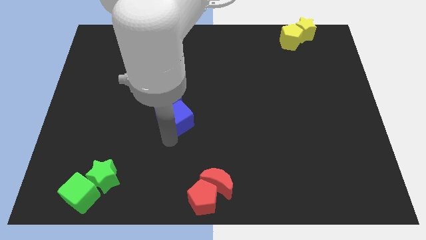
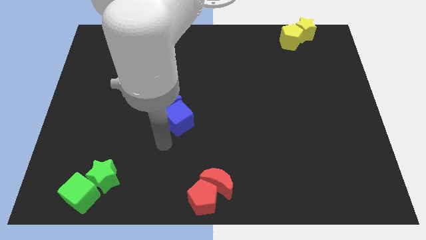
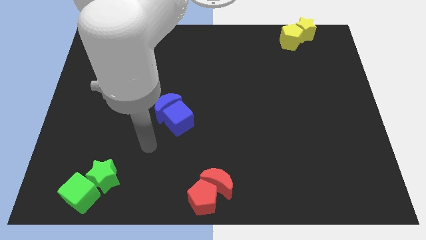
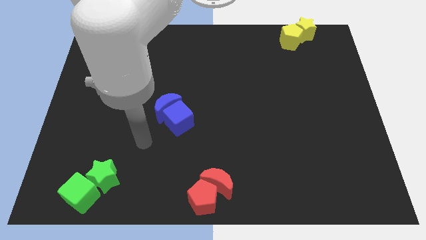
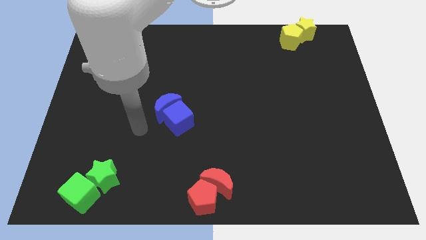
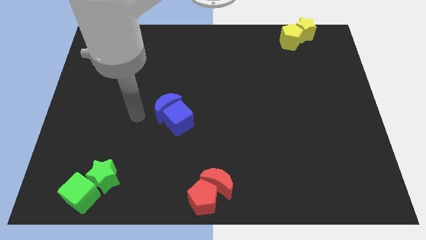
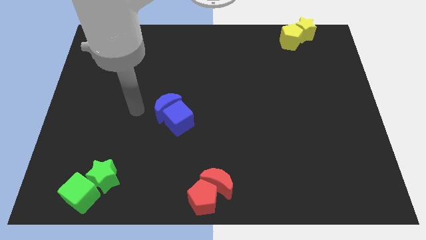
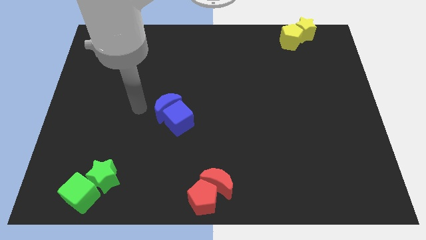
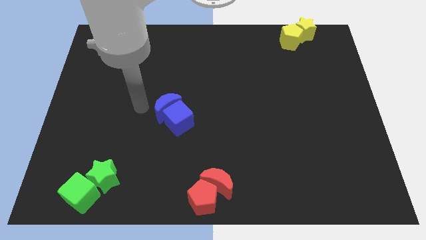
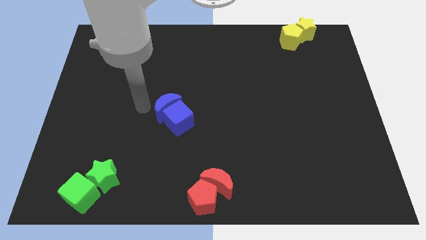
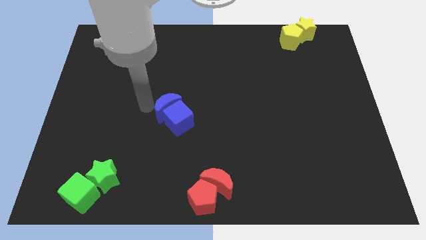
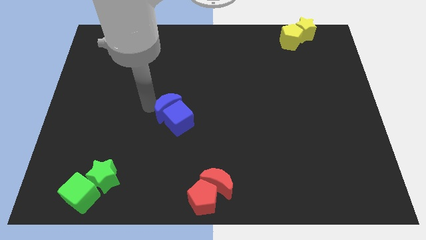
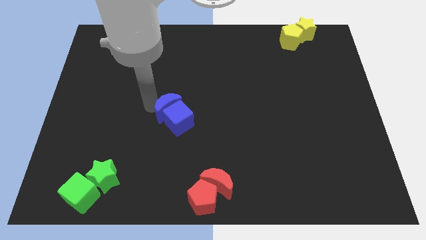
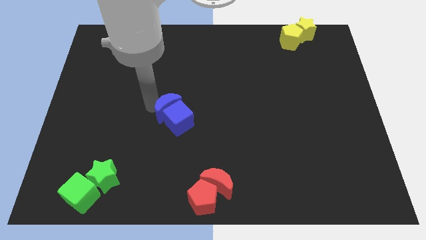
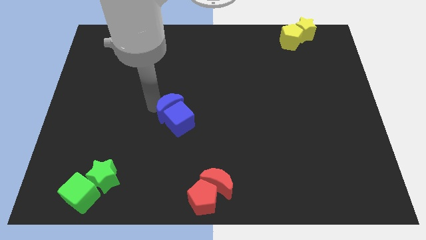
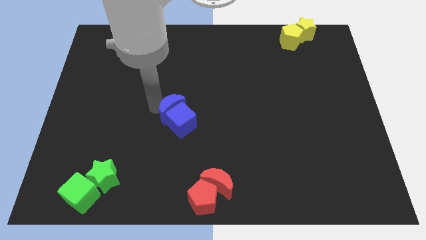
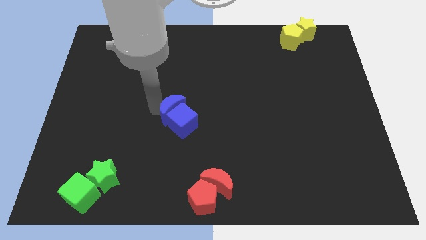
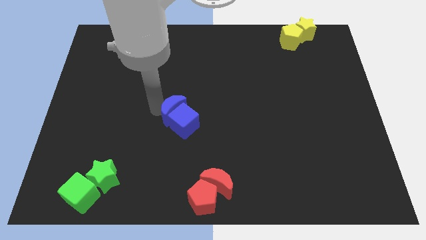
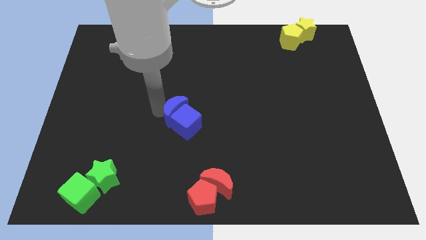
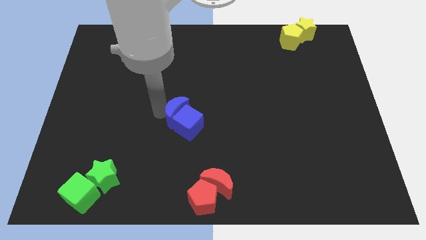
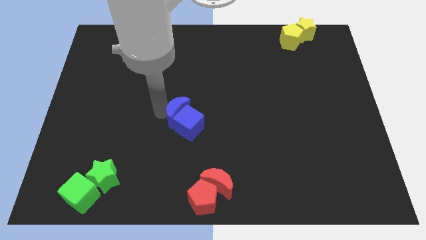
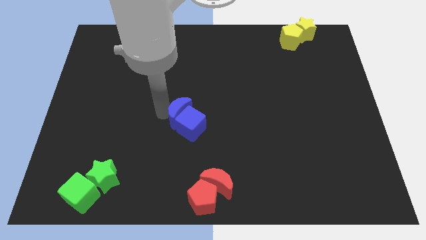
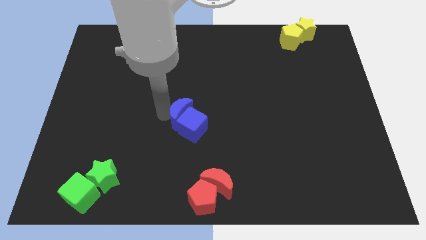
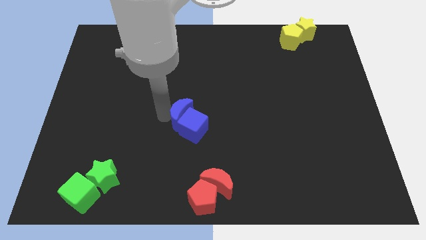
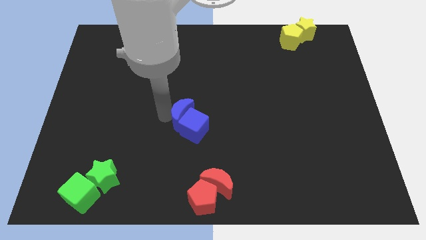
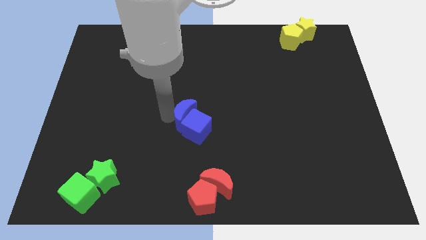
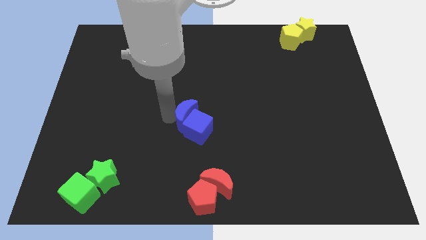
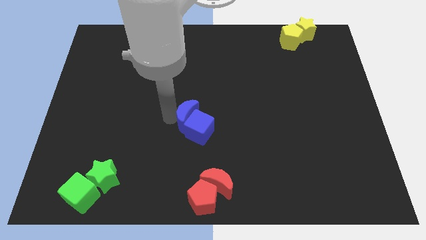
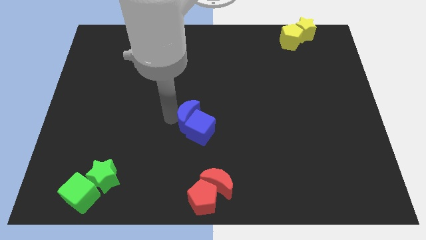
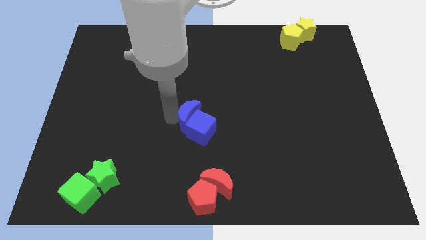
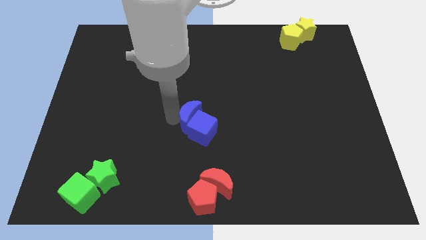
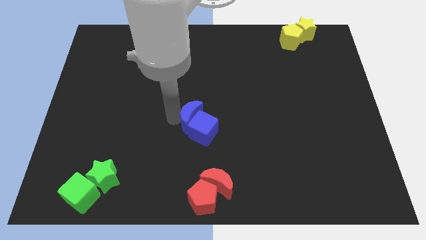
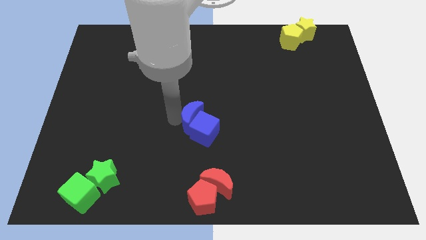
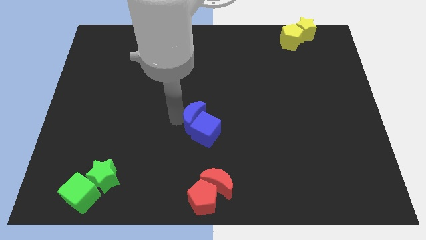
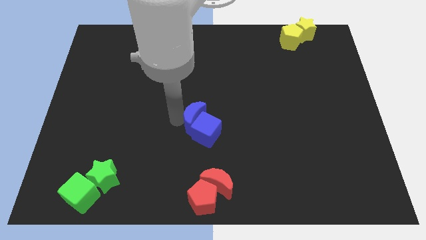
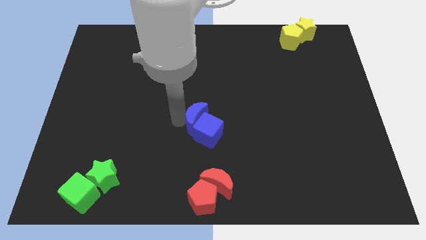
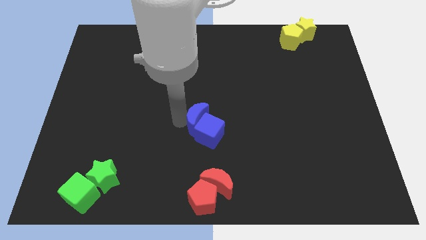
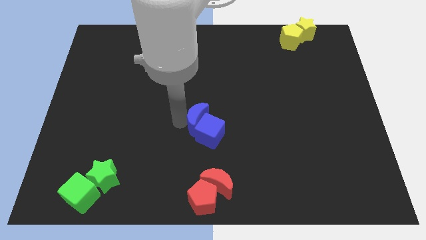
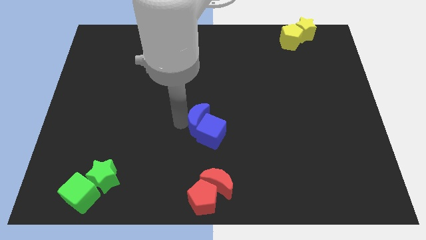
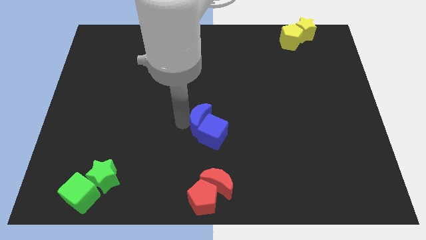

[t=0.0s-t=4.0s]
place both the blue blocks vertically above the both red blocks

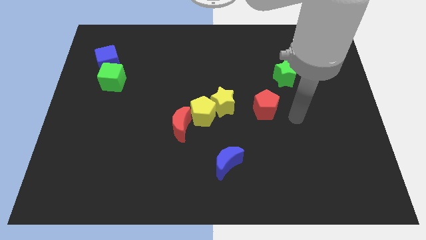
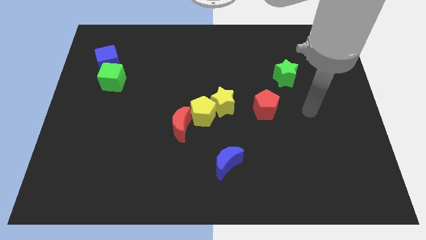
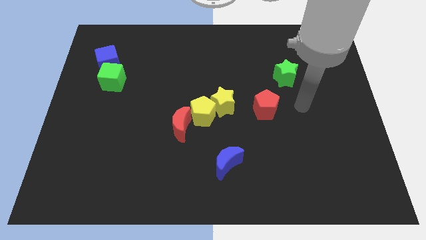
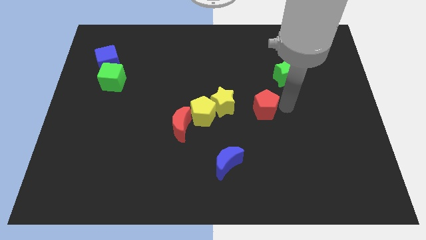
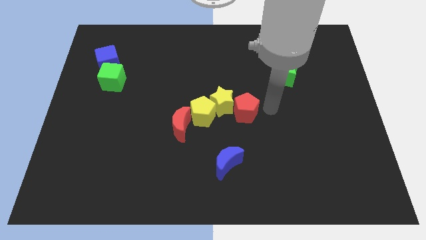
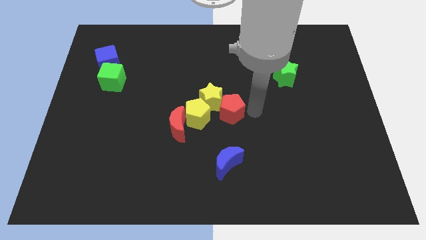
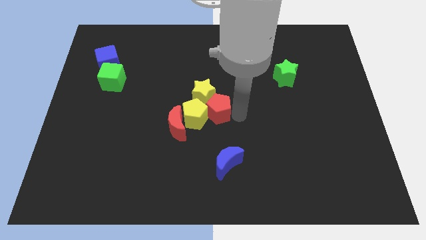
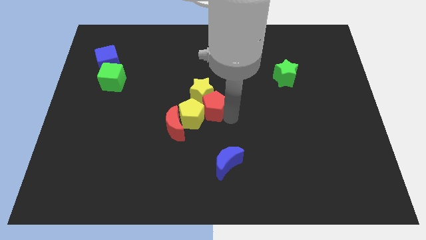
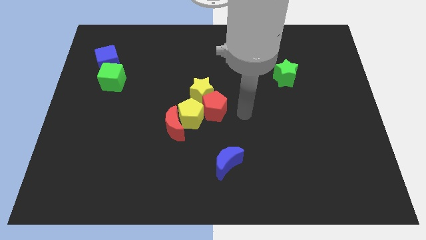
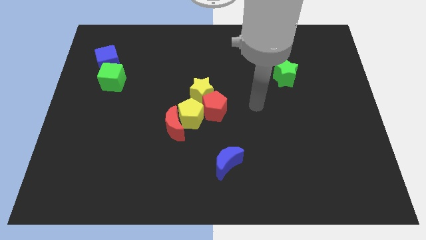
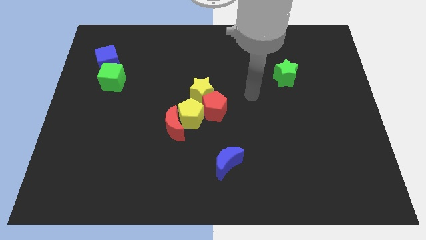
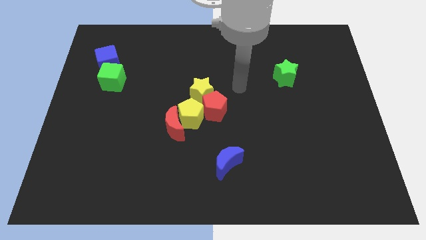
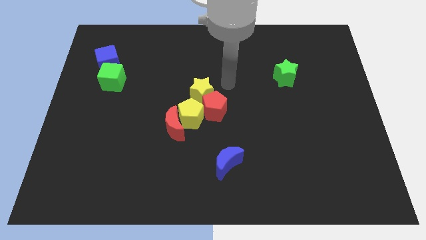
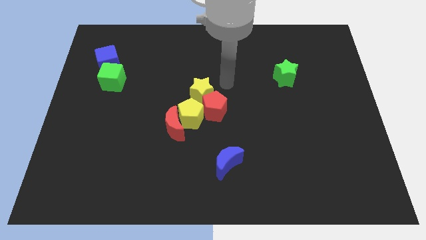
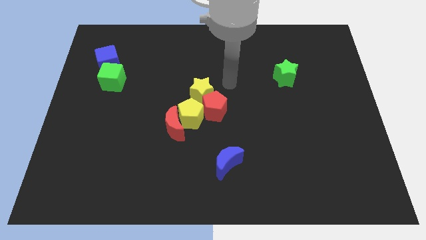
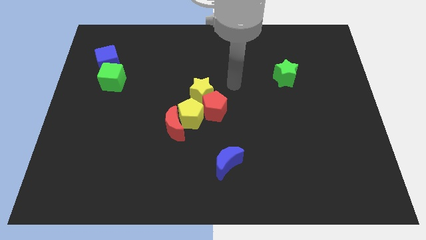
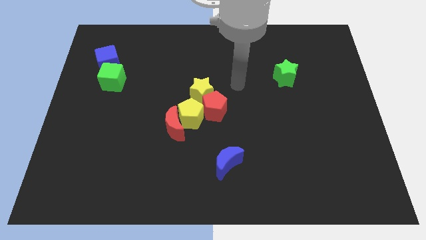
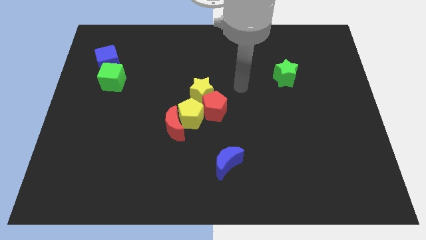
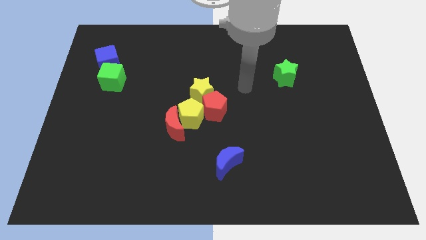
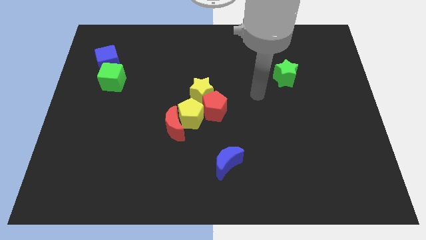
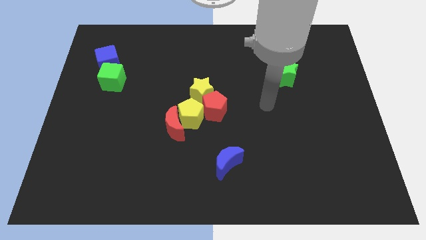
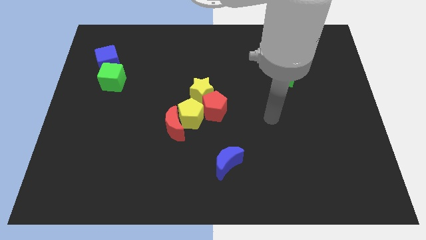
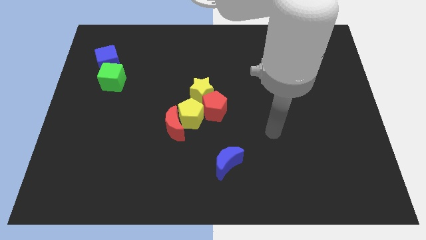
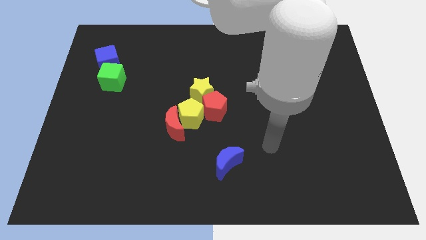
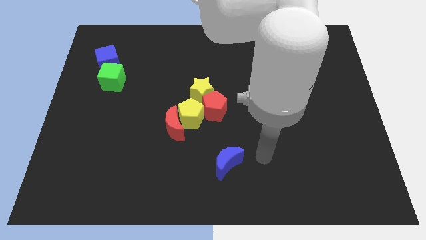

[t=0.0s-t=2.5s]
push the red pentagon close to the yellow blocks

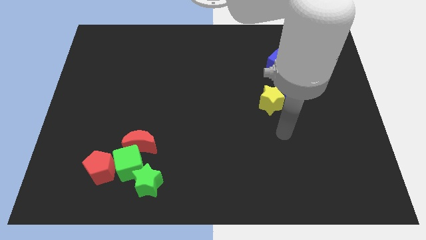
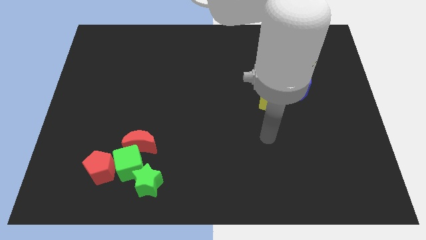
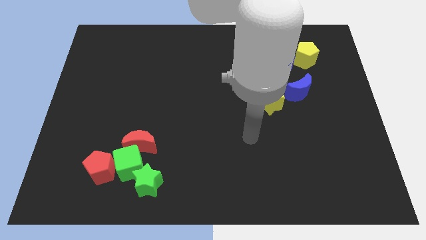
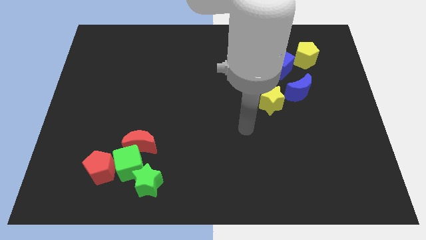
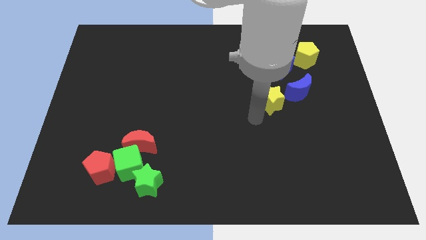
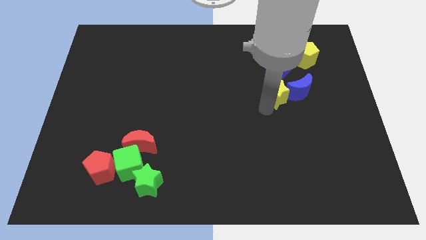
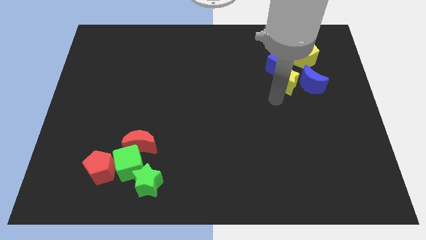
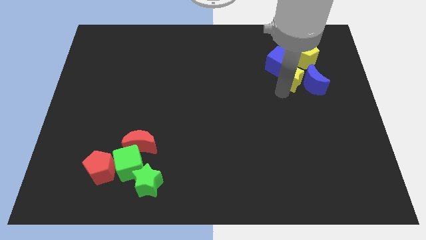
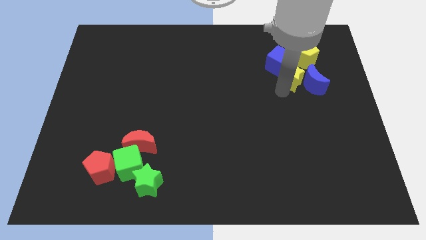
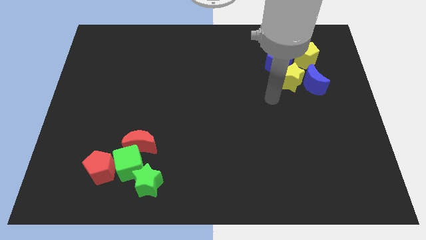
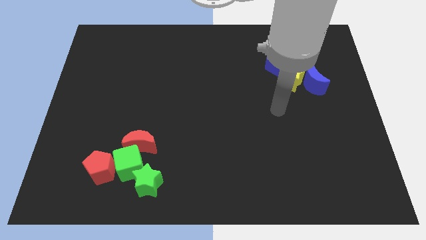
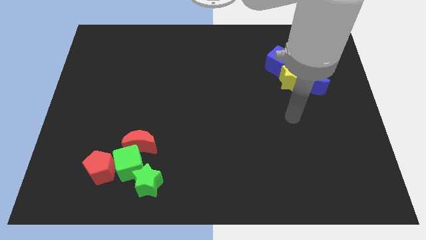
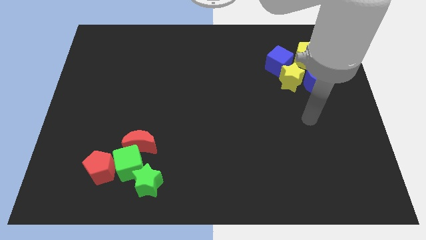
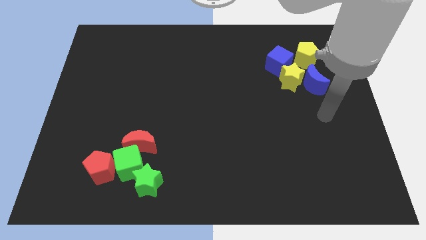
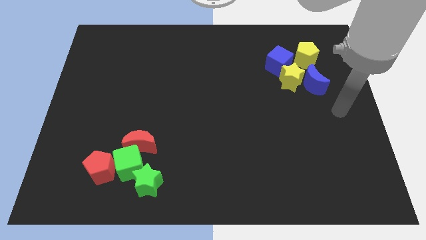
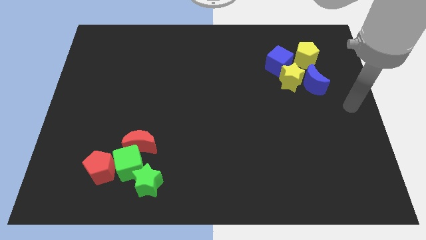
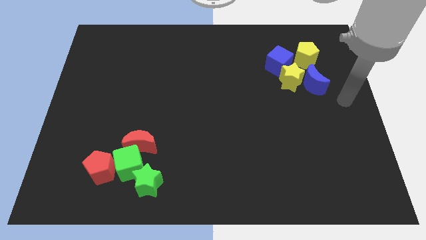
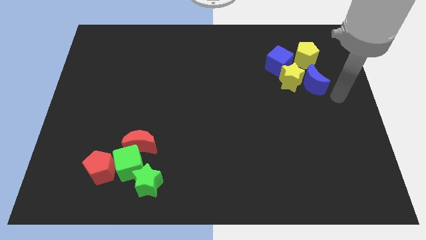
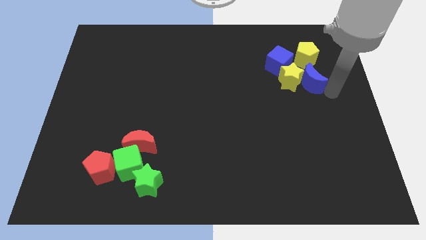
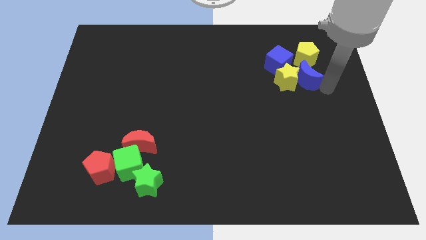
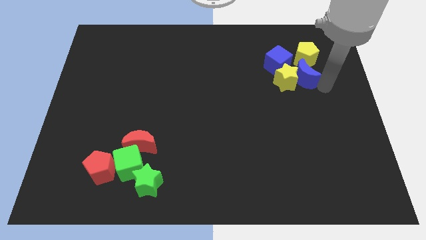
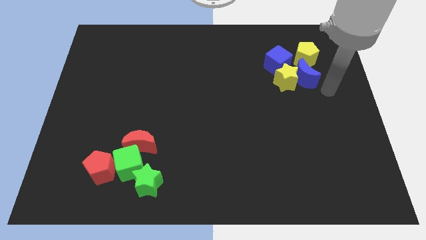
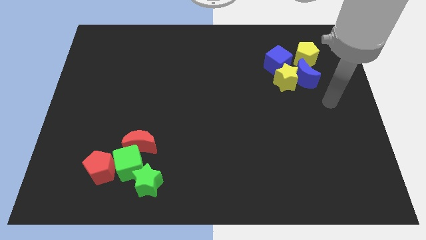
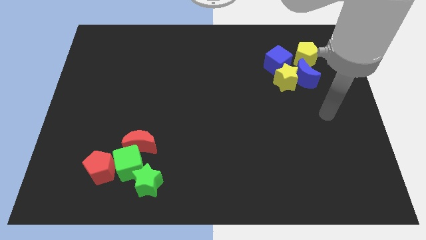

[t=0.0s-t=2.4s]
push yellow star into the group of blocks at the top

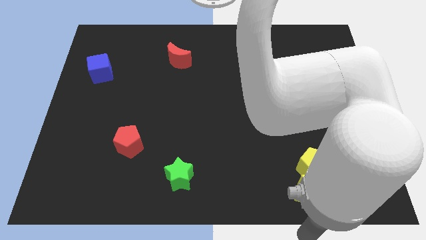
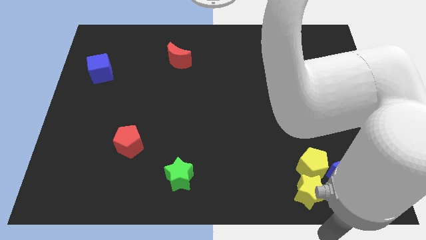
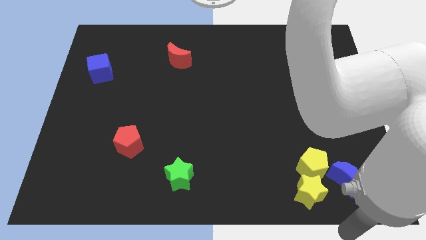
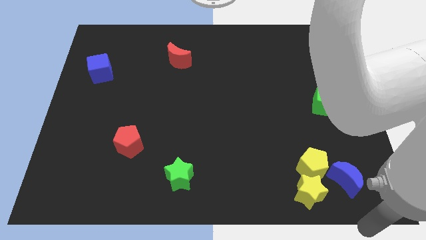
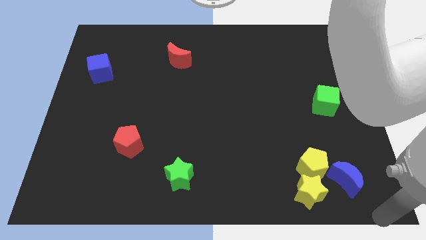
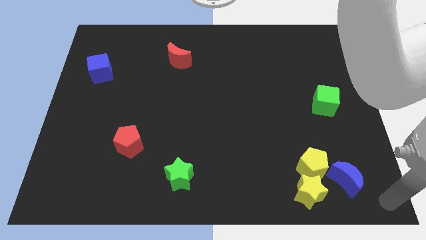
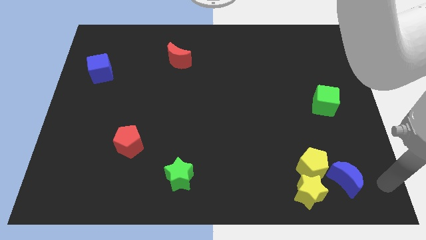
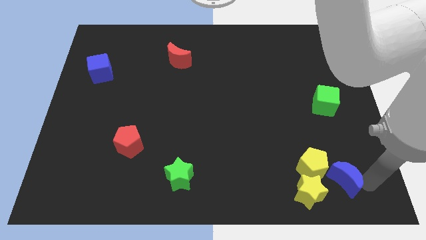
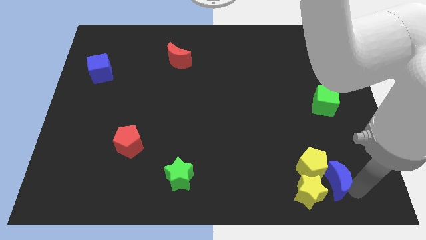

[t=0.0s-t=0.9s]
push the blue moon towards the yellow blocks
